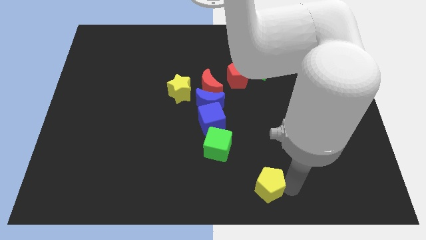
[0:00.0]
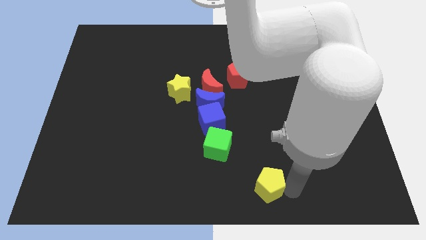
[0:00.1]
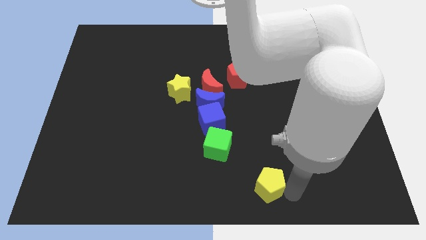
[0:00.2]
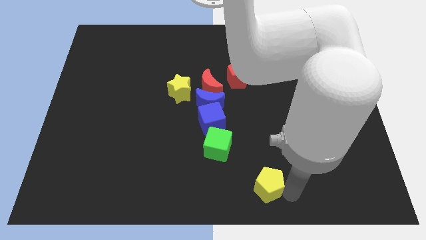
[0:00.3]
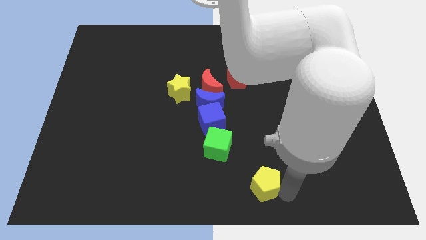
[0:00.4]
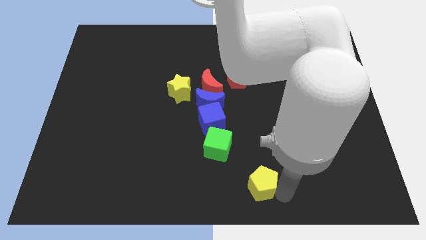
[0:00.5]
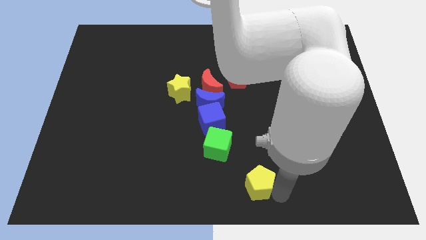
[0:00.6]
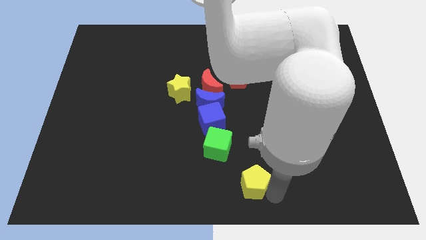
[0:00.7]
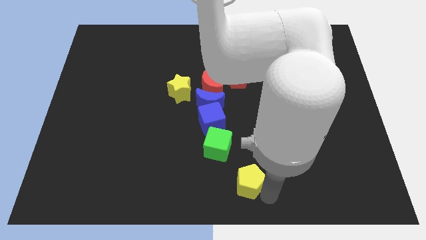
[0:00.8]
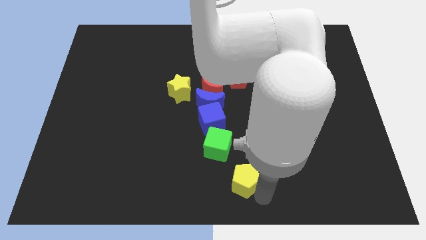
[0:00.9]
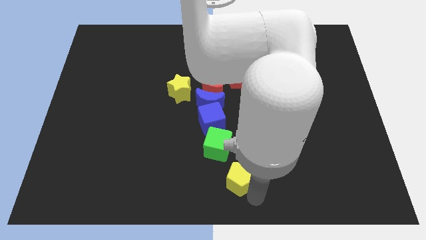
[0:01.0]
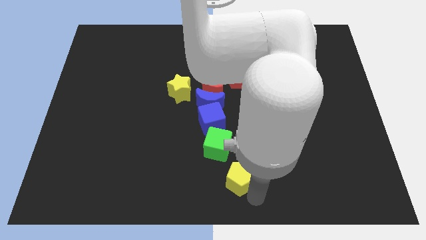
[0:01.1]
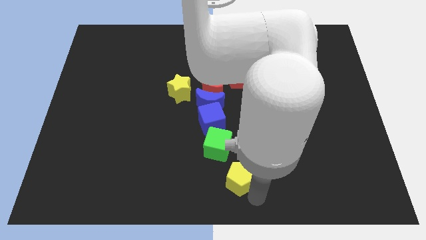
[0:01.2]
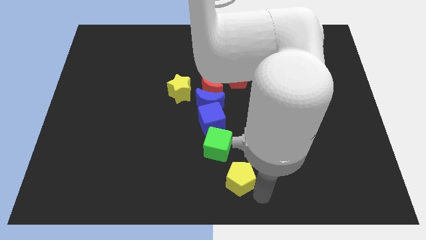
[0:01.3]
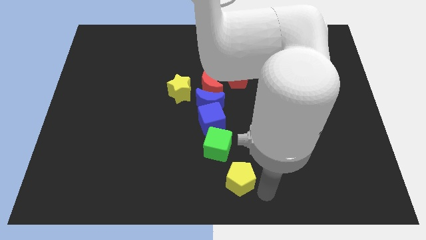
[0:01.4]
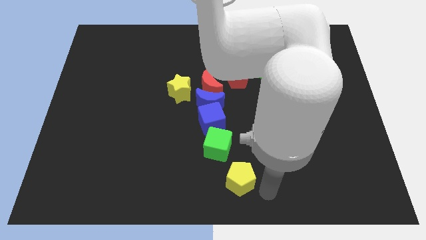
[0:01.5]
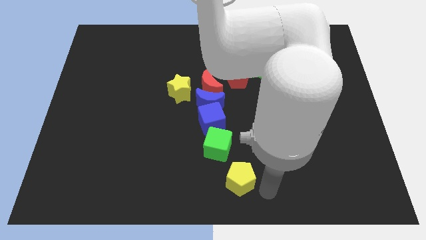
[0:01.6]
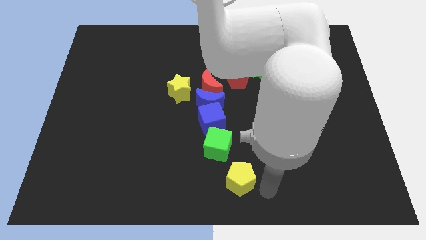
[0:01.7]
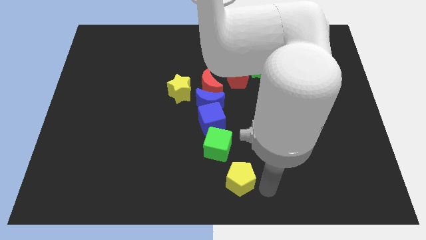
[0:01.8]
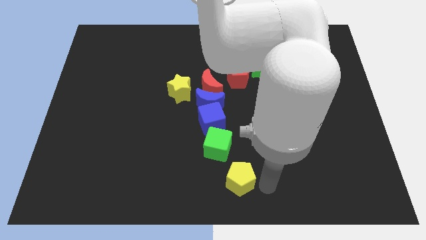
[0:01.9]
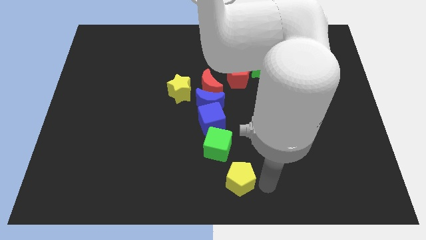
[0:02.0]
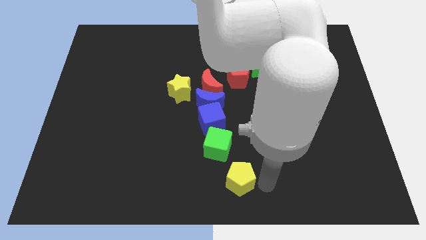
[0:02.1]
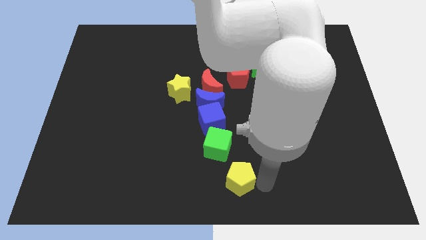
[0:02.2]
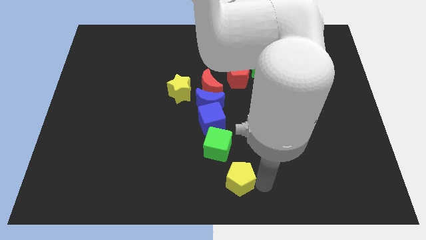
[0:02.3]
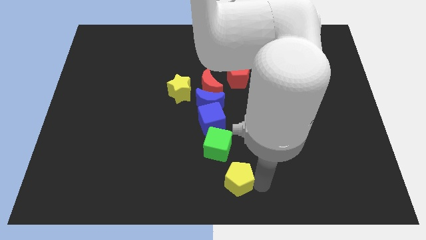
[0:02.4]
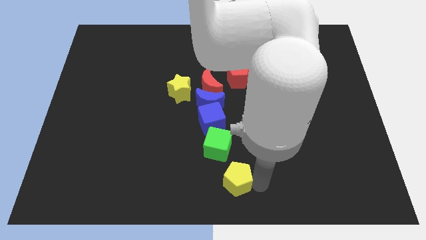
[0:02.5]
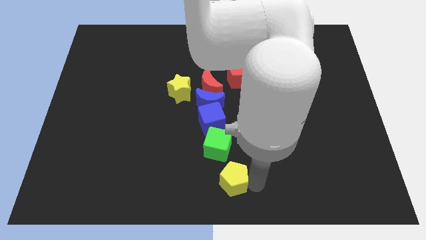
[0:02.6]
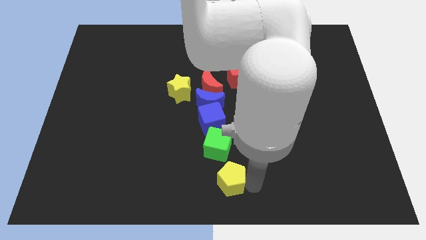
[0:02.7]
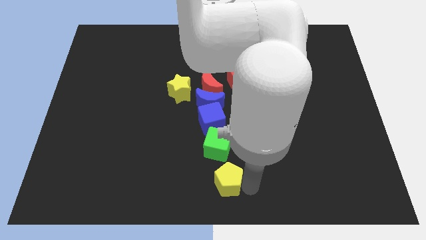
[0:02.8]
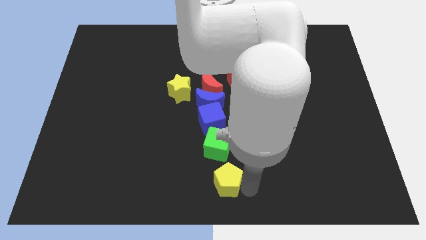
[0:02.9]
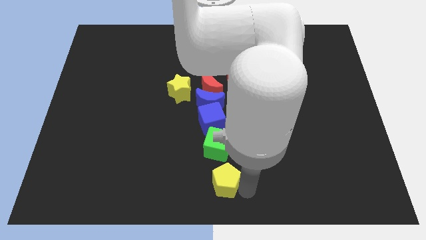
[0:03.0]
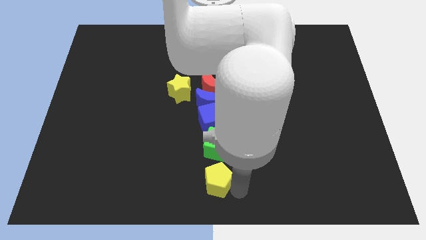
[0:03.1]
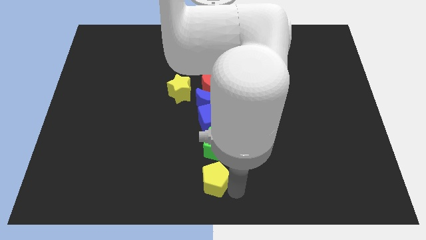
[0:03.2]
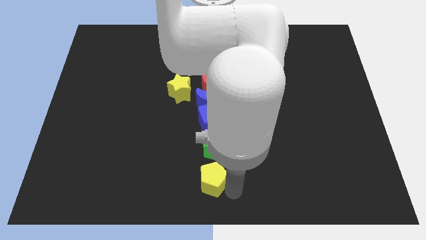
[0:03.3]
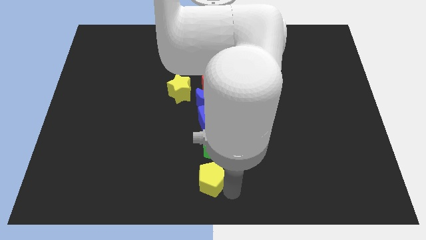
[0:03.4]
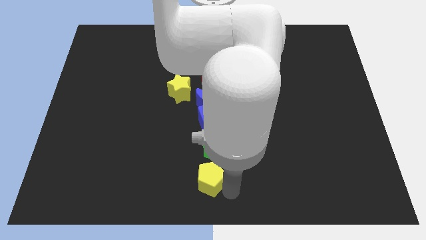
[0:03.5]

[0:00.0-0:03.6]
move the yellow pentagon below the green cube

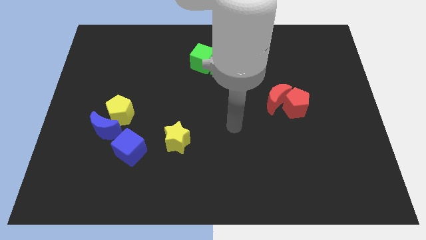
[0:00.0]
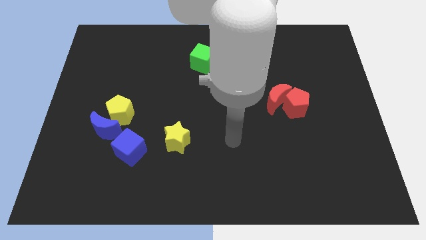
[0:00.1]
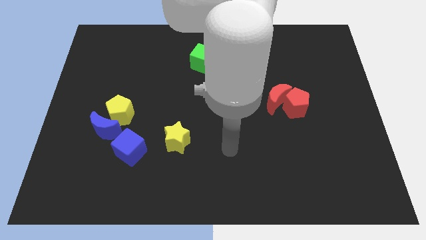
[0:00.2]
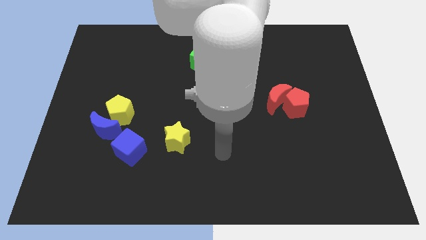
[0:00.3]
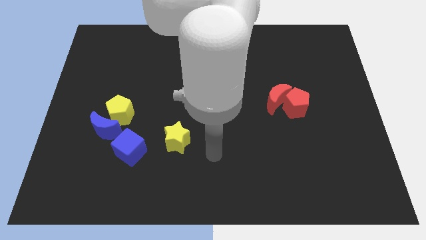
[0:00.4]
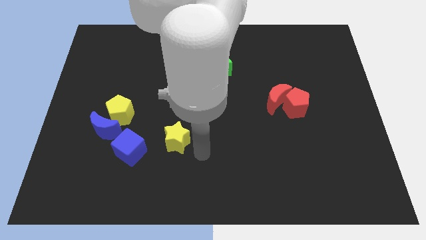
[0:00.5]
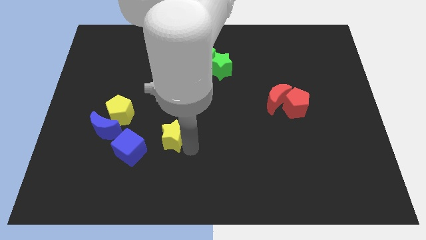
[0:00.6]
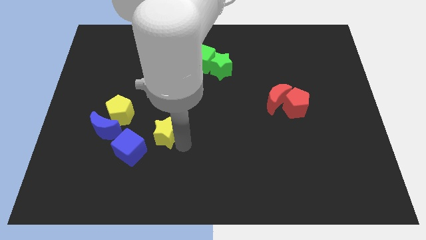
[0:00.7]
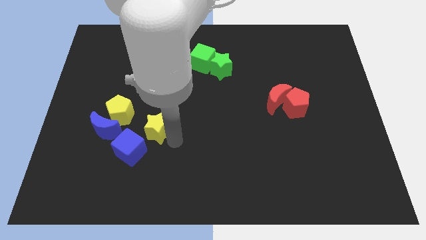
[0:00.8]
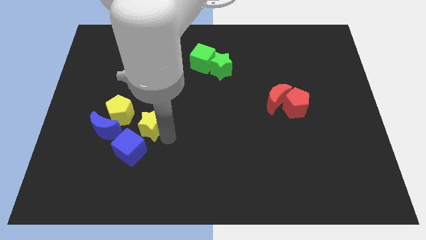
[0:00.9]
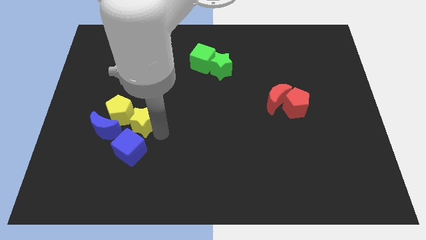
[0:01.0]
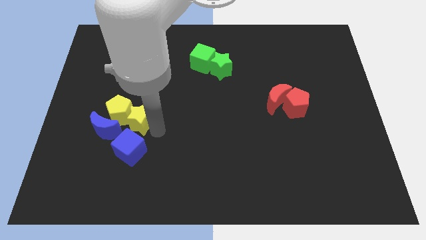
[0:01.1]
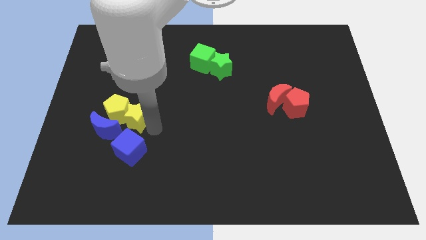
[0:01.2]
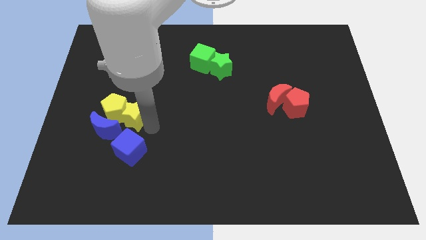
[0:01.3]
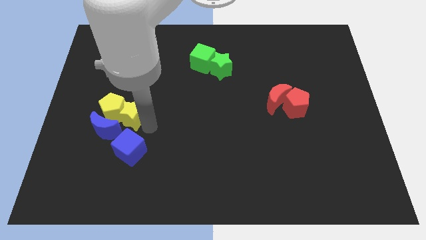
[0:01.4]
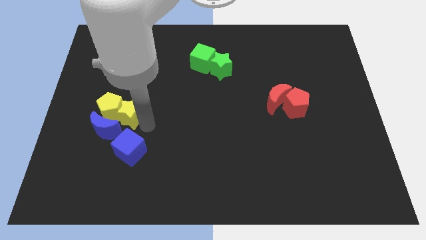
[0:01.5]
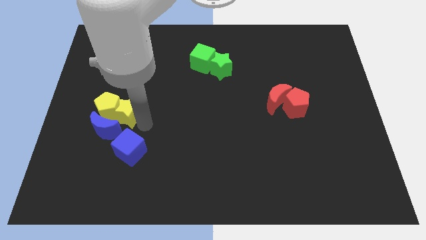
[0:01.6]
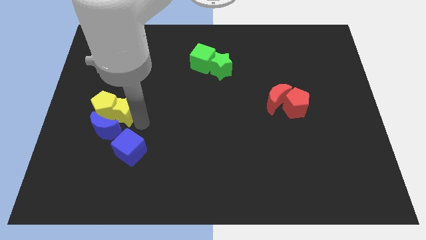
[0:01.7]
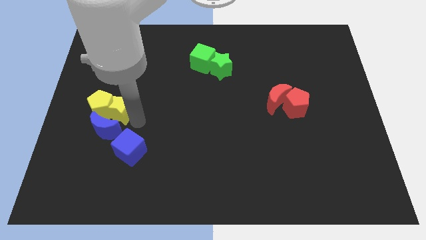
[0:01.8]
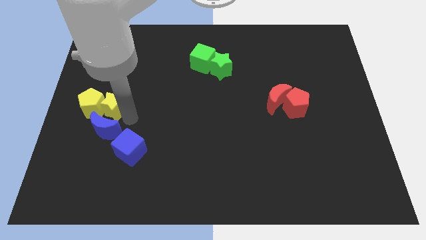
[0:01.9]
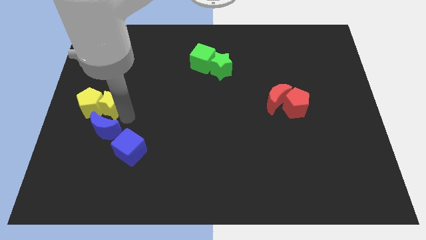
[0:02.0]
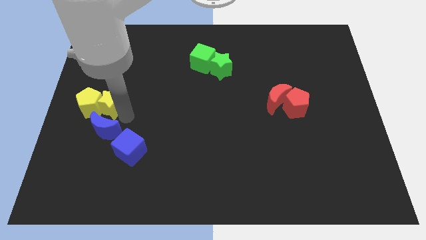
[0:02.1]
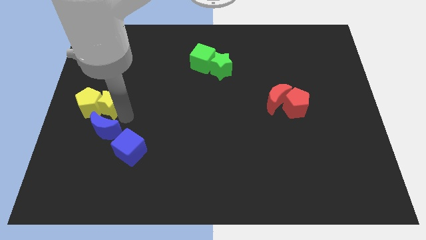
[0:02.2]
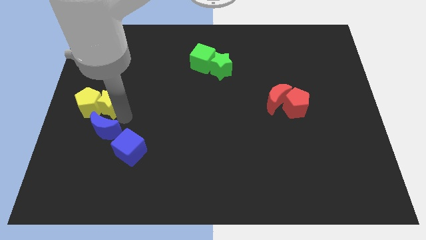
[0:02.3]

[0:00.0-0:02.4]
push the yellow blocks to the center left

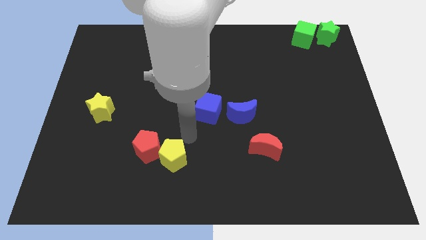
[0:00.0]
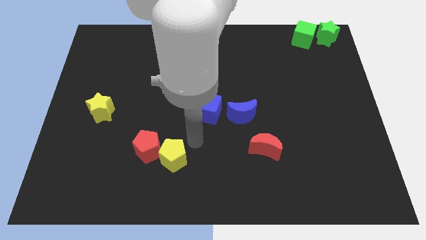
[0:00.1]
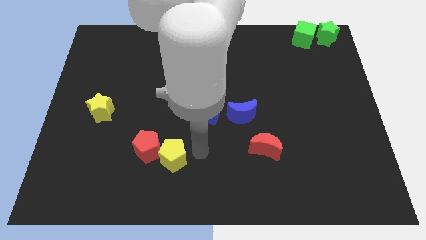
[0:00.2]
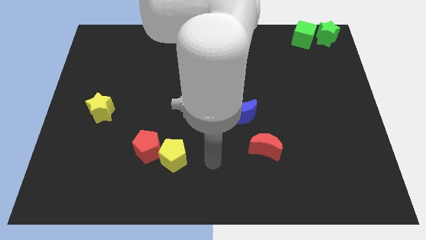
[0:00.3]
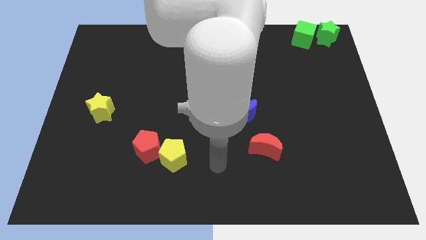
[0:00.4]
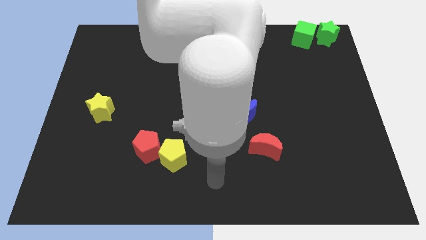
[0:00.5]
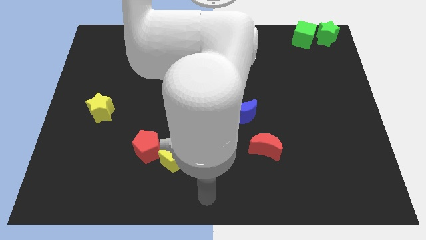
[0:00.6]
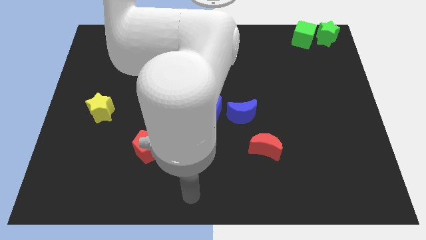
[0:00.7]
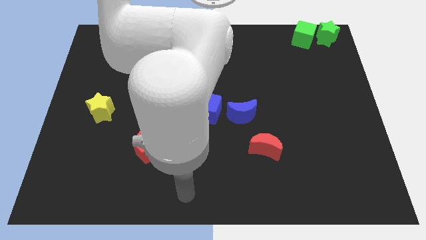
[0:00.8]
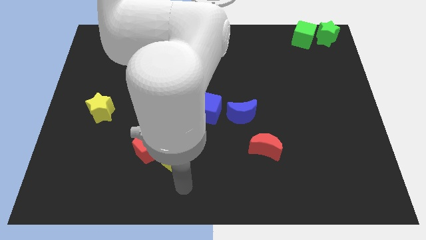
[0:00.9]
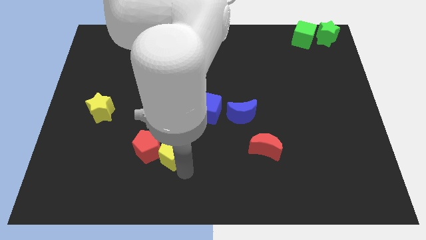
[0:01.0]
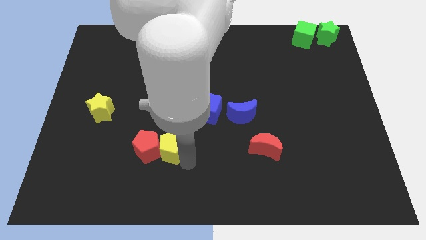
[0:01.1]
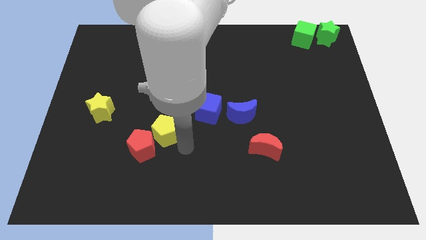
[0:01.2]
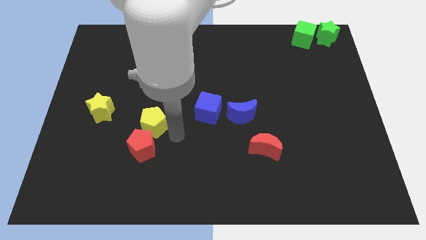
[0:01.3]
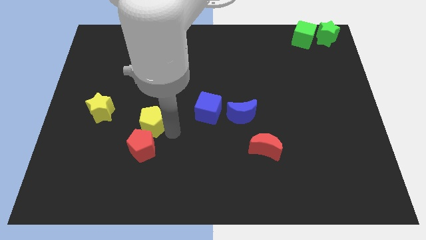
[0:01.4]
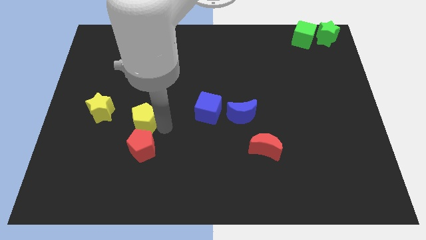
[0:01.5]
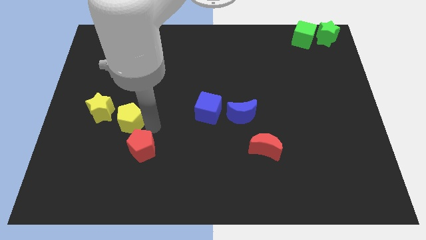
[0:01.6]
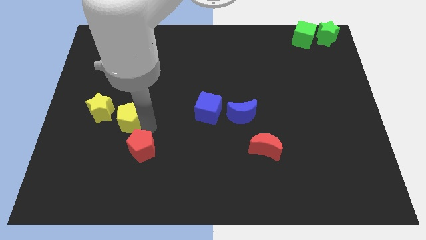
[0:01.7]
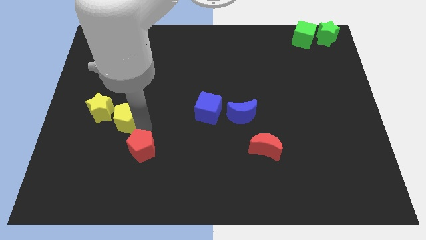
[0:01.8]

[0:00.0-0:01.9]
move the yellow pentagon into the yellow star

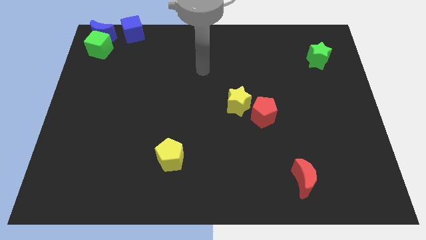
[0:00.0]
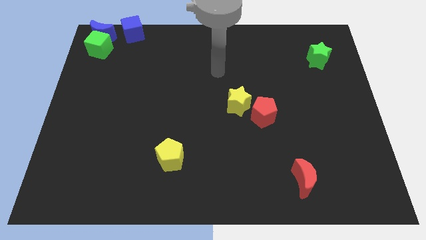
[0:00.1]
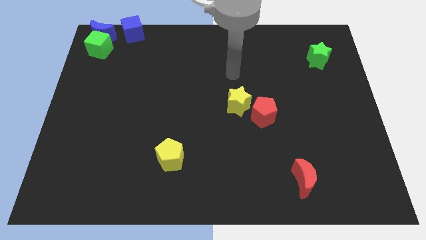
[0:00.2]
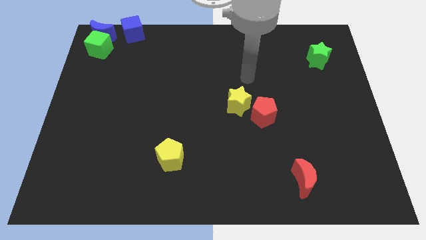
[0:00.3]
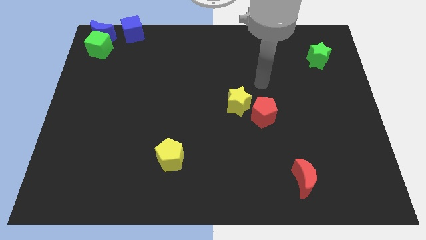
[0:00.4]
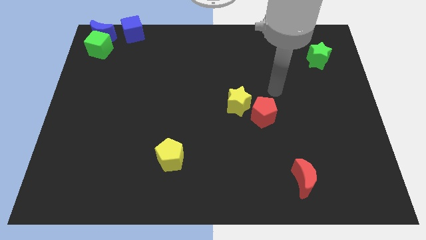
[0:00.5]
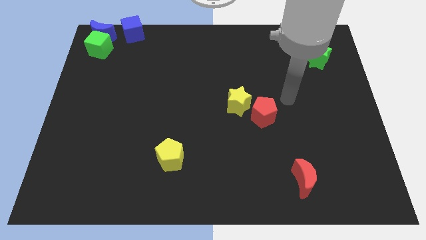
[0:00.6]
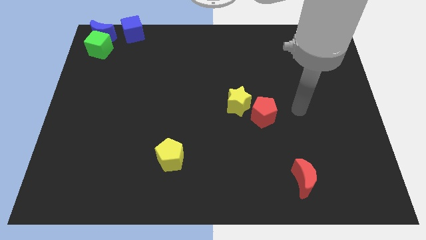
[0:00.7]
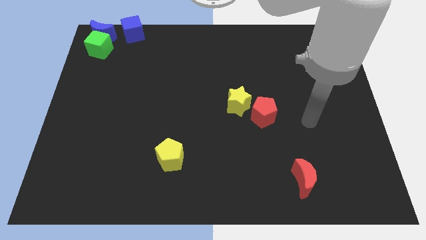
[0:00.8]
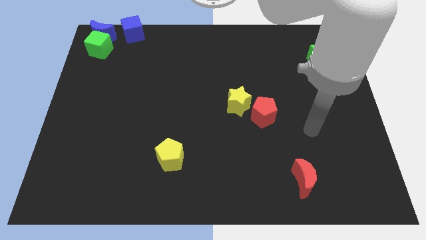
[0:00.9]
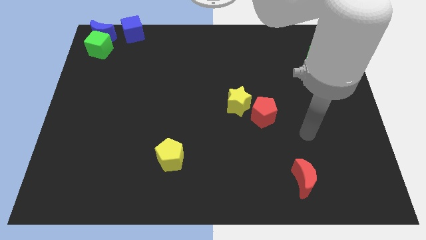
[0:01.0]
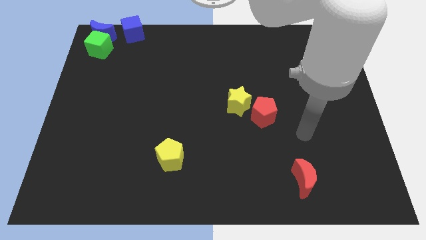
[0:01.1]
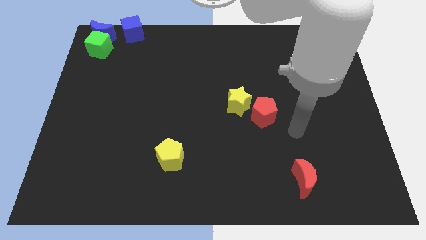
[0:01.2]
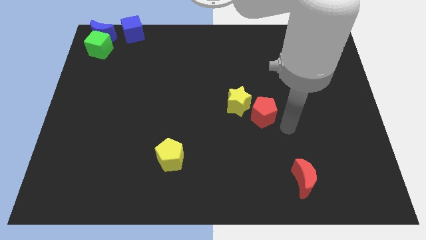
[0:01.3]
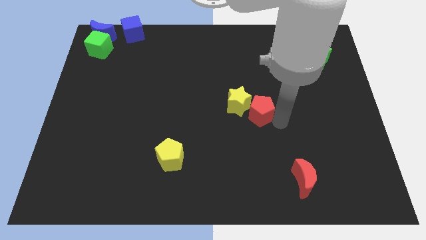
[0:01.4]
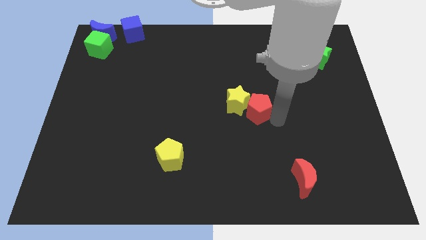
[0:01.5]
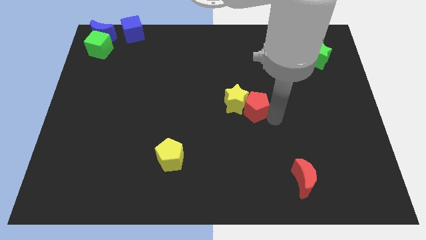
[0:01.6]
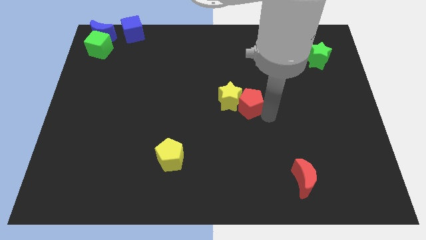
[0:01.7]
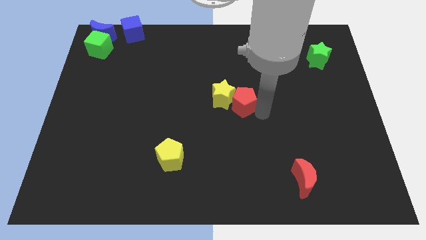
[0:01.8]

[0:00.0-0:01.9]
place yourself right to red pentagon
